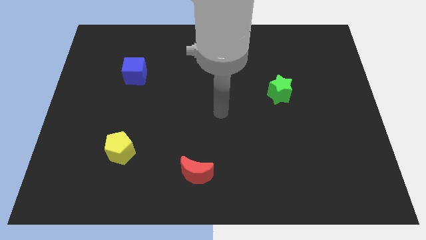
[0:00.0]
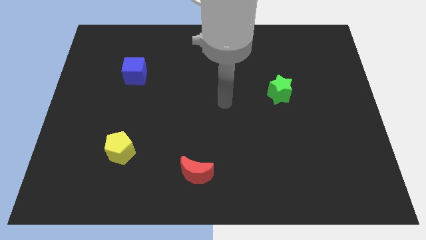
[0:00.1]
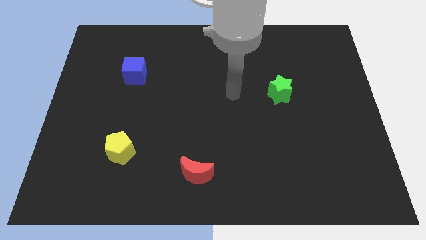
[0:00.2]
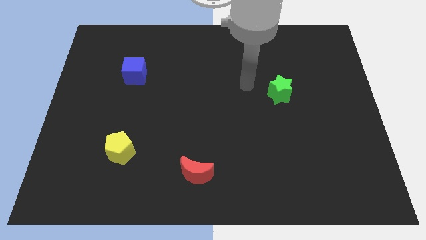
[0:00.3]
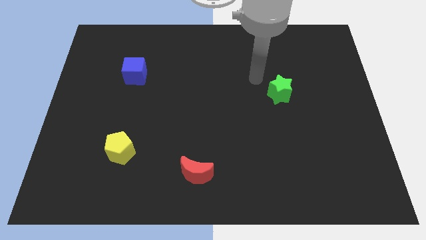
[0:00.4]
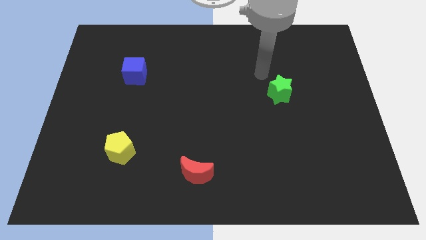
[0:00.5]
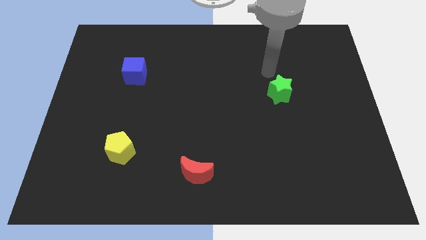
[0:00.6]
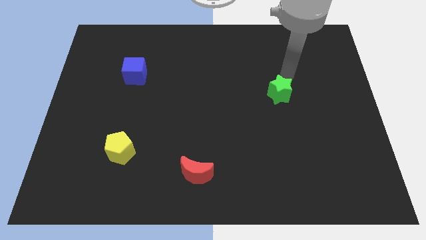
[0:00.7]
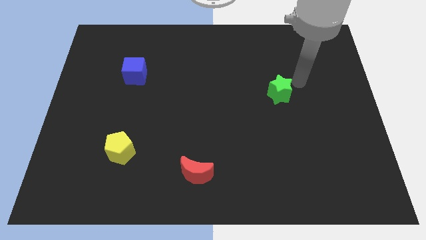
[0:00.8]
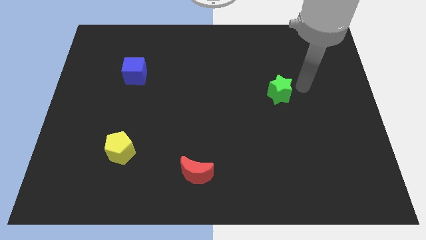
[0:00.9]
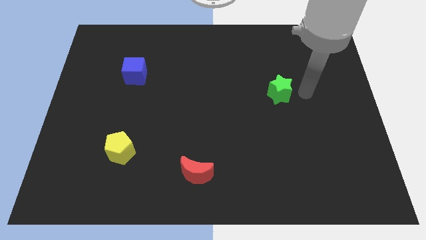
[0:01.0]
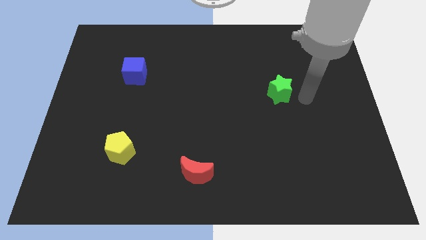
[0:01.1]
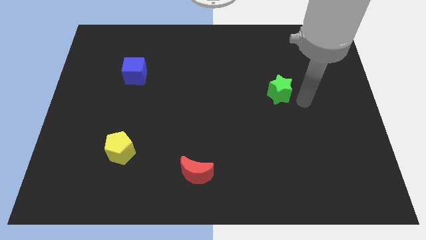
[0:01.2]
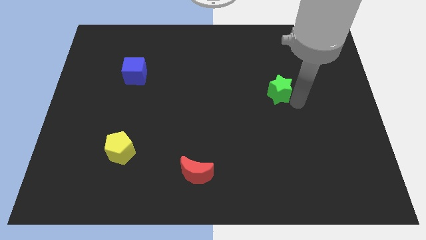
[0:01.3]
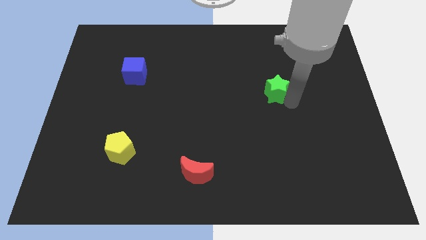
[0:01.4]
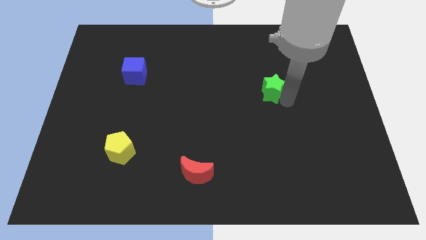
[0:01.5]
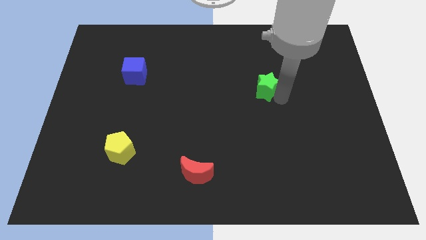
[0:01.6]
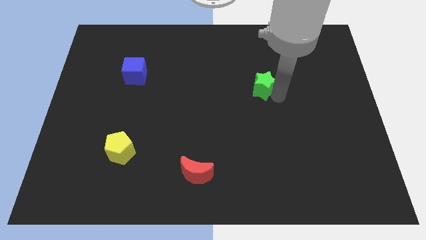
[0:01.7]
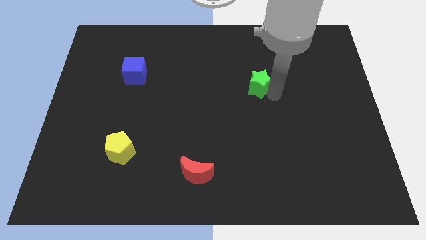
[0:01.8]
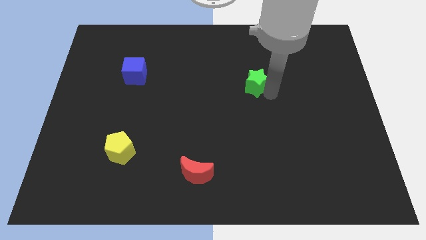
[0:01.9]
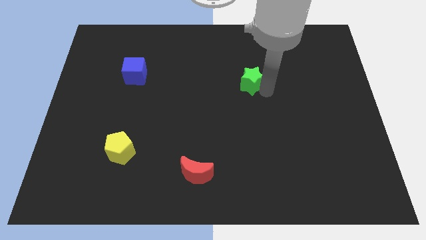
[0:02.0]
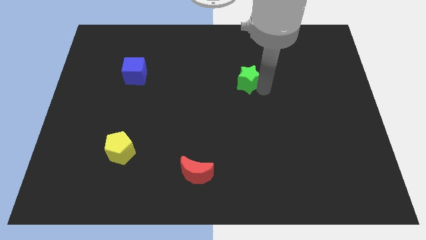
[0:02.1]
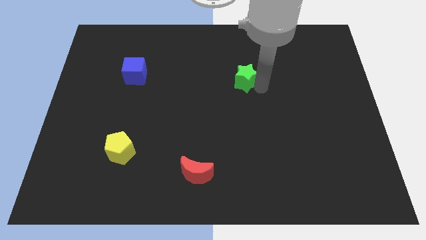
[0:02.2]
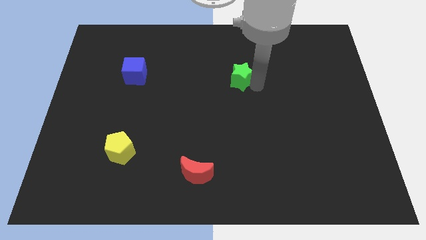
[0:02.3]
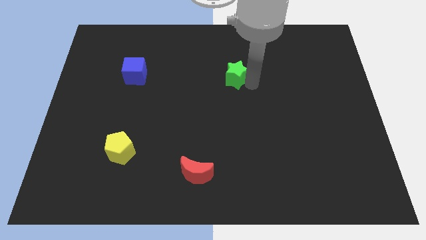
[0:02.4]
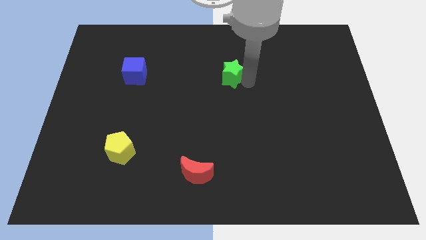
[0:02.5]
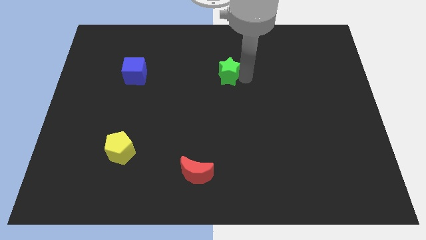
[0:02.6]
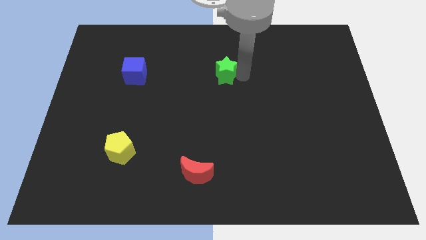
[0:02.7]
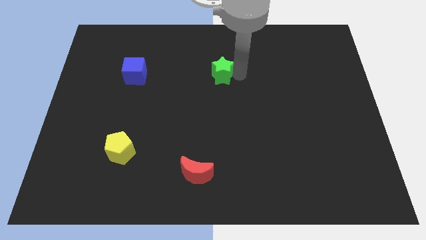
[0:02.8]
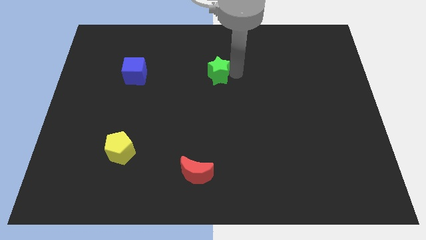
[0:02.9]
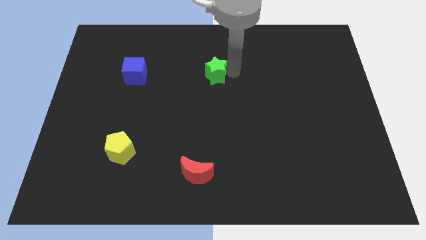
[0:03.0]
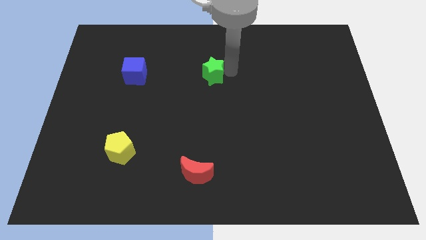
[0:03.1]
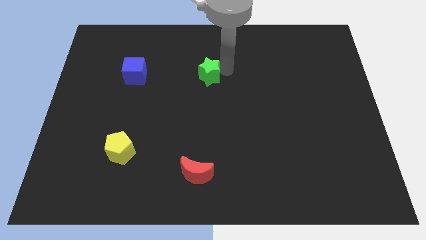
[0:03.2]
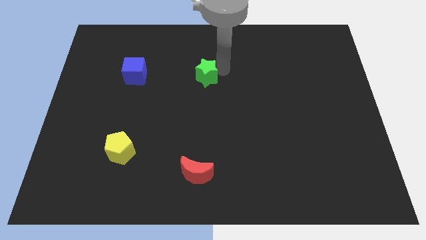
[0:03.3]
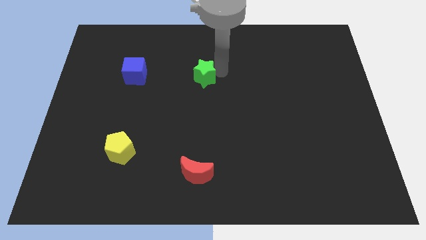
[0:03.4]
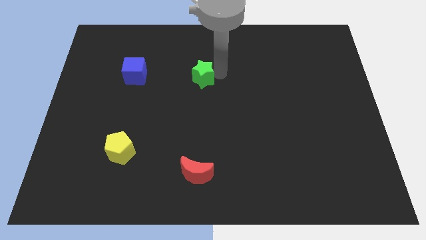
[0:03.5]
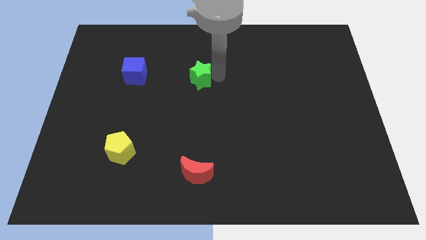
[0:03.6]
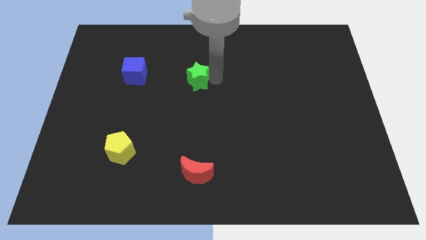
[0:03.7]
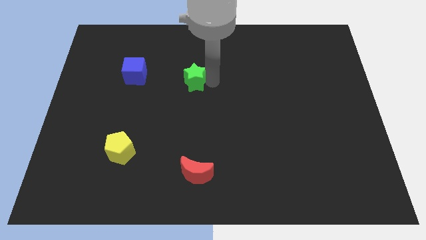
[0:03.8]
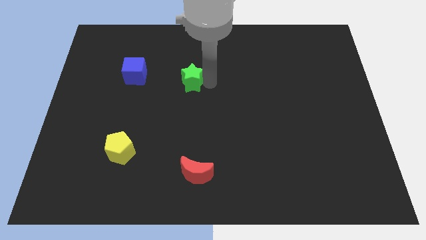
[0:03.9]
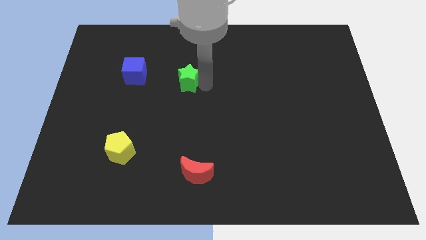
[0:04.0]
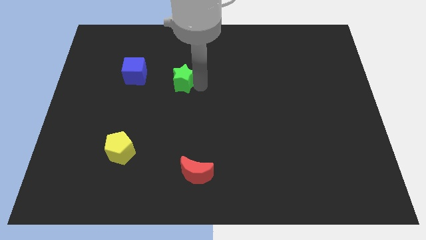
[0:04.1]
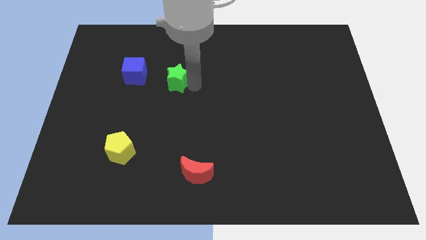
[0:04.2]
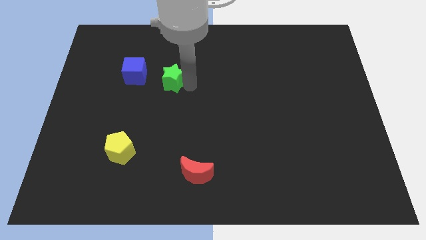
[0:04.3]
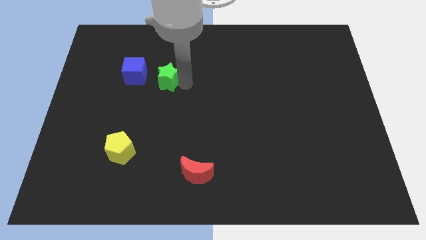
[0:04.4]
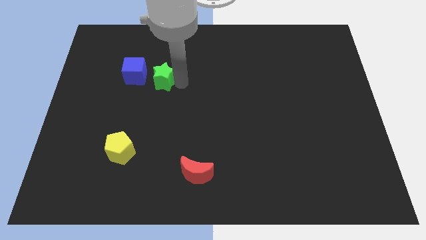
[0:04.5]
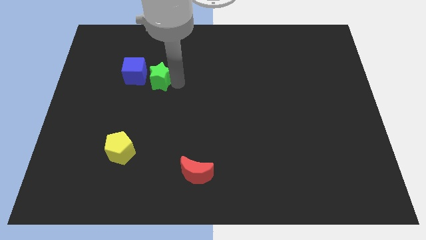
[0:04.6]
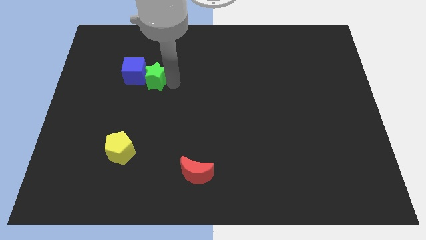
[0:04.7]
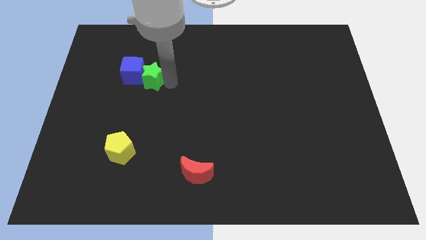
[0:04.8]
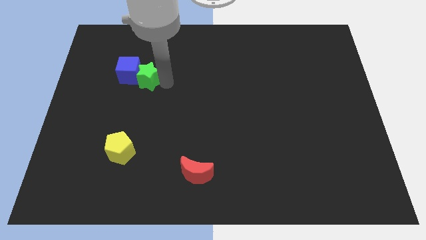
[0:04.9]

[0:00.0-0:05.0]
move the green star next to the blue block

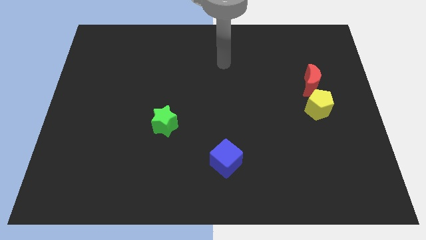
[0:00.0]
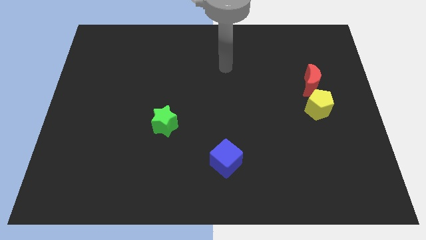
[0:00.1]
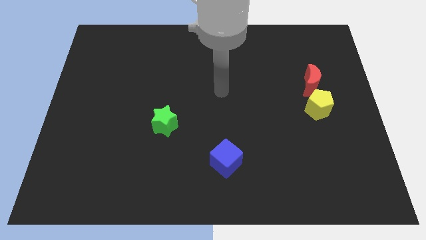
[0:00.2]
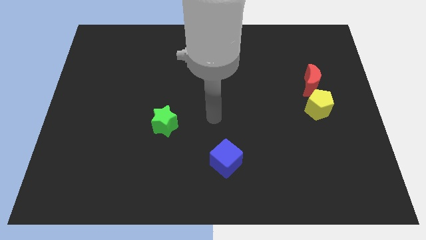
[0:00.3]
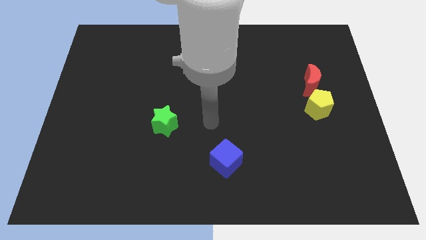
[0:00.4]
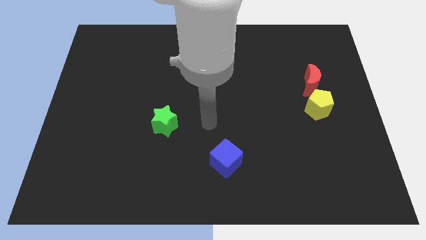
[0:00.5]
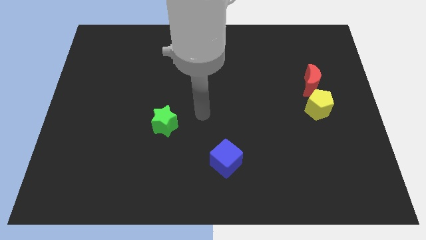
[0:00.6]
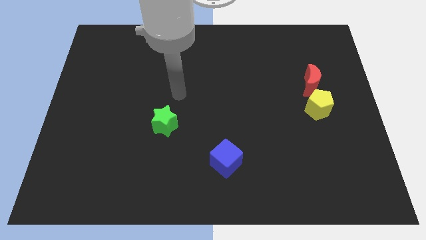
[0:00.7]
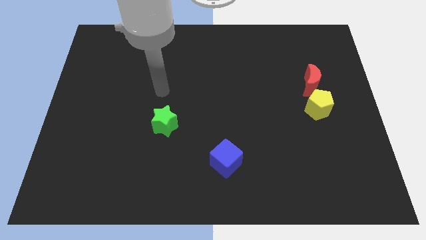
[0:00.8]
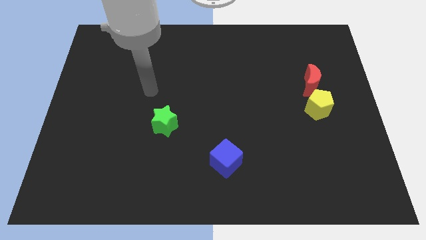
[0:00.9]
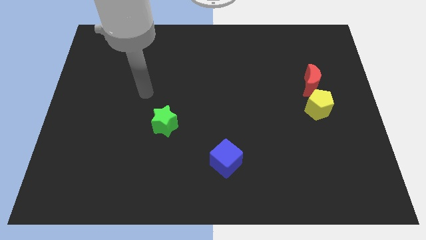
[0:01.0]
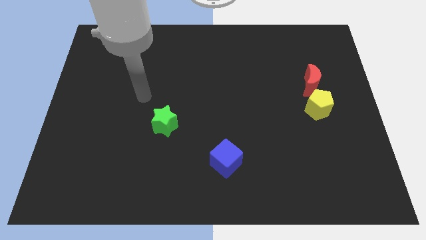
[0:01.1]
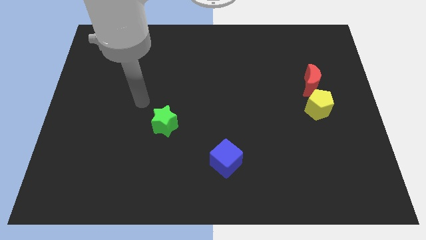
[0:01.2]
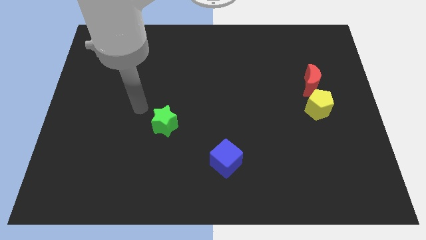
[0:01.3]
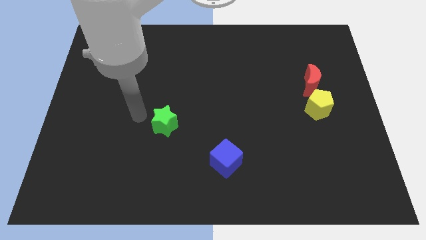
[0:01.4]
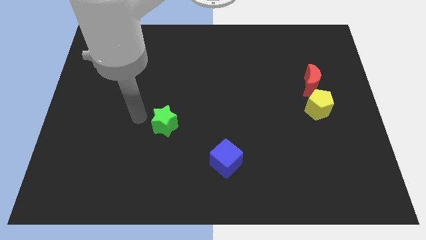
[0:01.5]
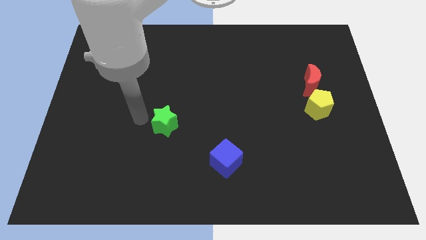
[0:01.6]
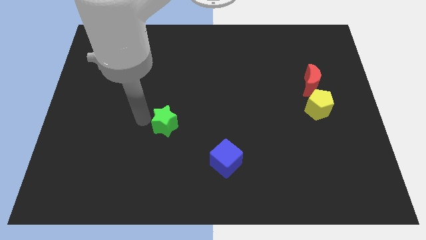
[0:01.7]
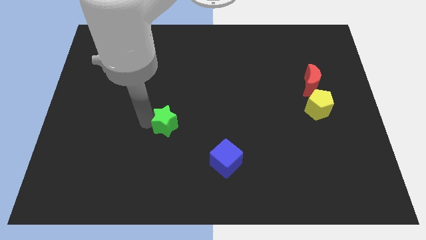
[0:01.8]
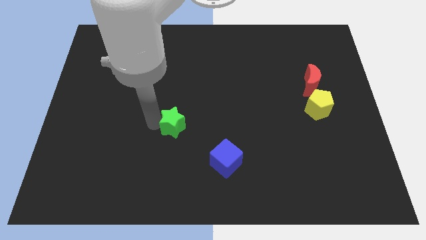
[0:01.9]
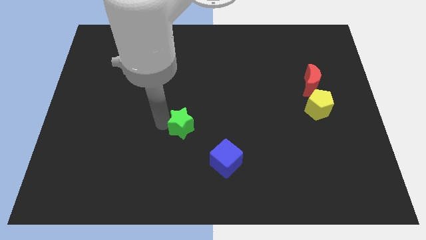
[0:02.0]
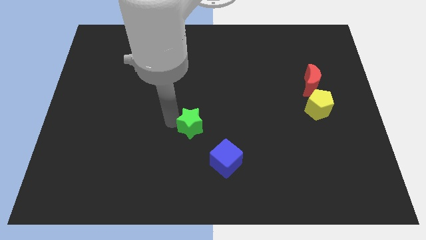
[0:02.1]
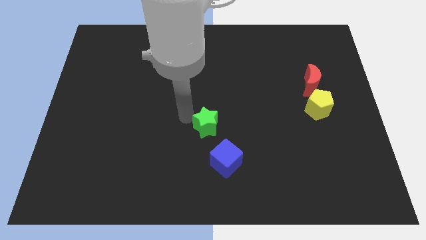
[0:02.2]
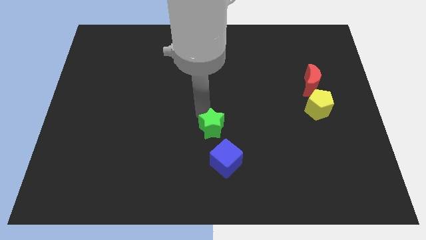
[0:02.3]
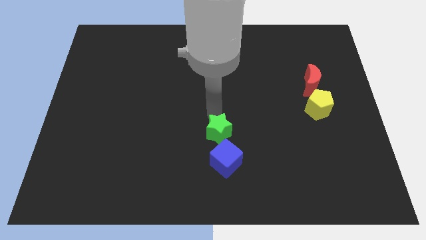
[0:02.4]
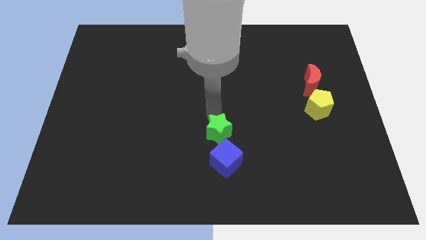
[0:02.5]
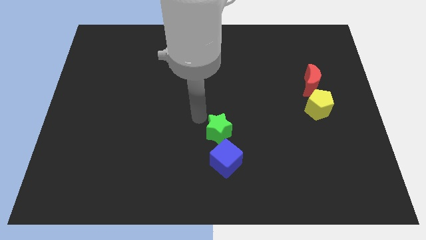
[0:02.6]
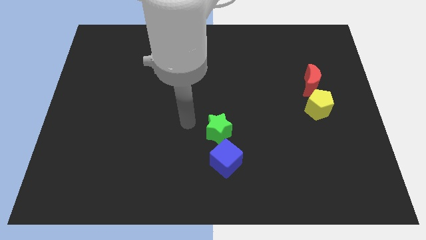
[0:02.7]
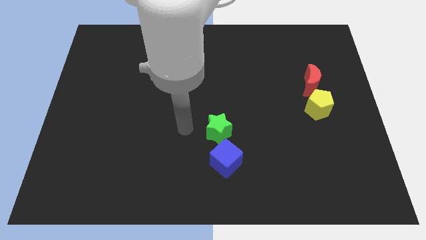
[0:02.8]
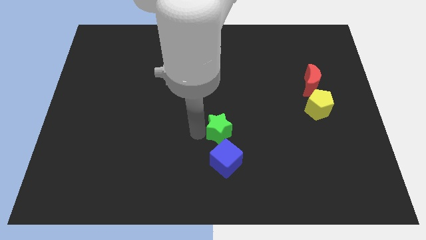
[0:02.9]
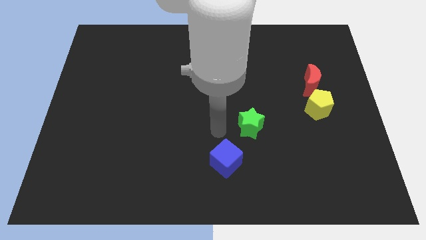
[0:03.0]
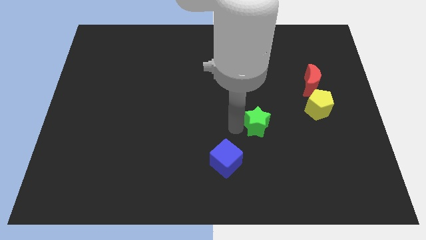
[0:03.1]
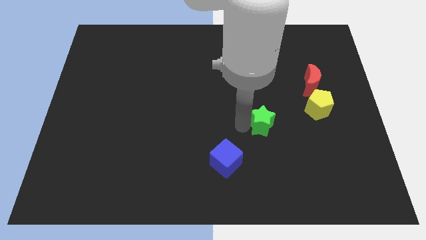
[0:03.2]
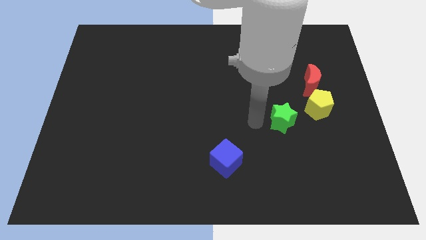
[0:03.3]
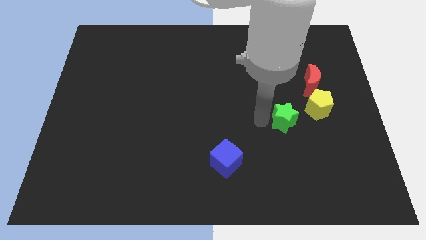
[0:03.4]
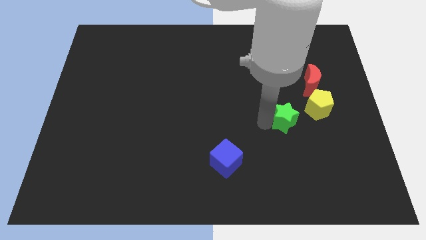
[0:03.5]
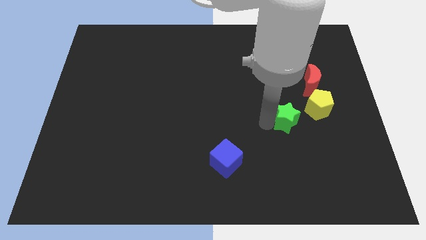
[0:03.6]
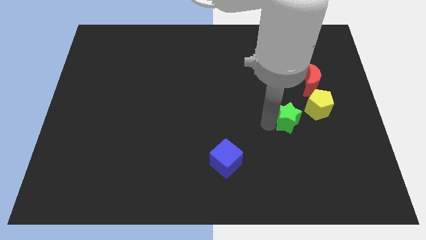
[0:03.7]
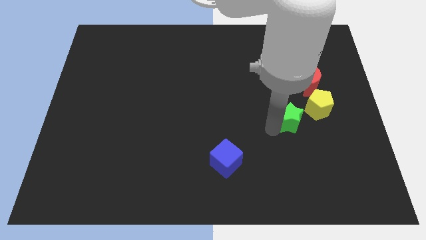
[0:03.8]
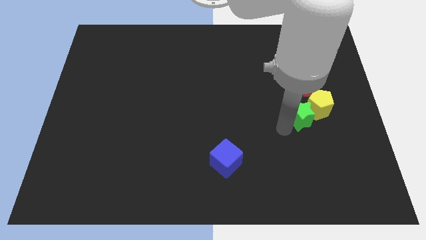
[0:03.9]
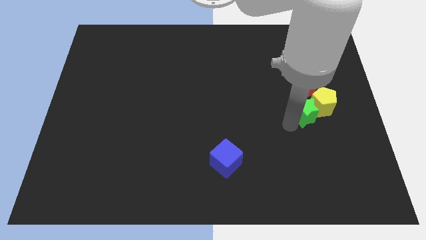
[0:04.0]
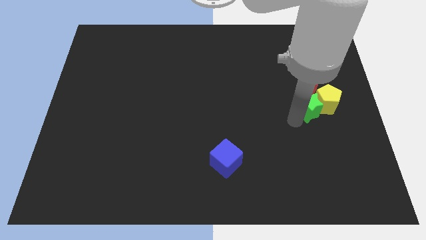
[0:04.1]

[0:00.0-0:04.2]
move the star towards the yellow block
